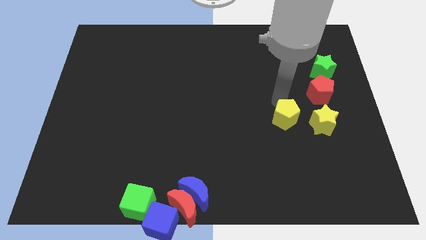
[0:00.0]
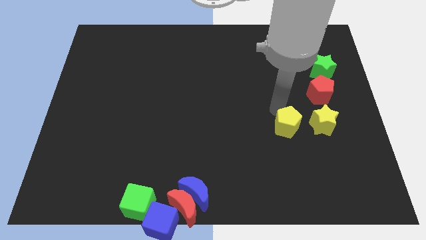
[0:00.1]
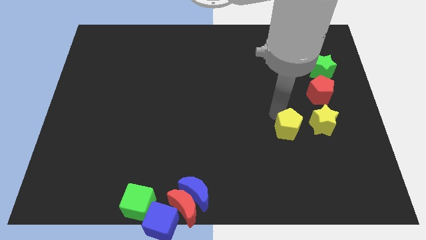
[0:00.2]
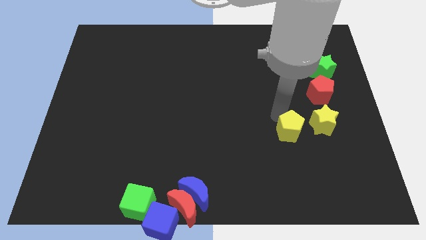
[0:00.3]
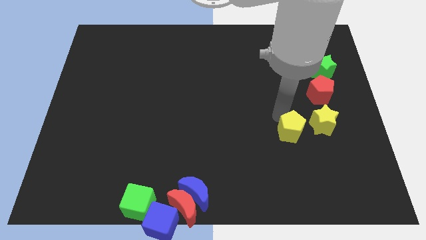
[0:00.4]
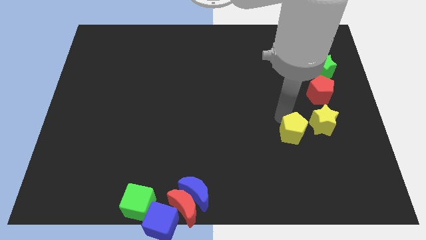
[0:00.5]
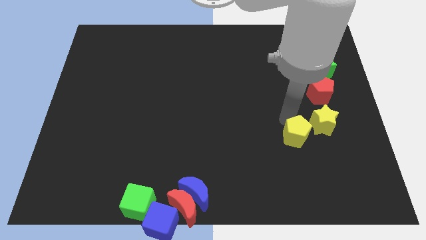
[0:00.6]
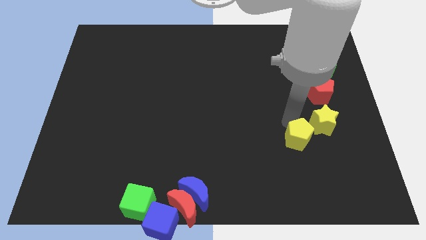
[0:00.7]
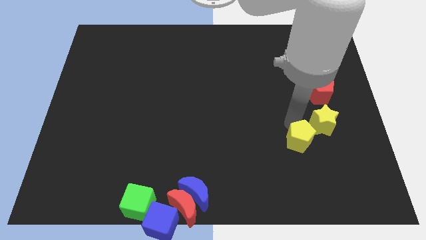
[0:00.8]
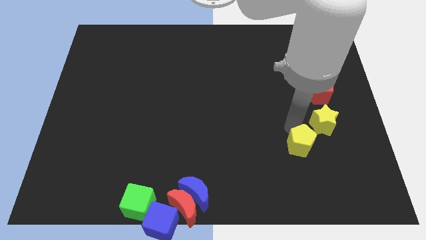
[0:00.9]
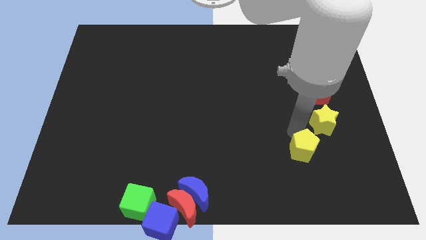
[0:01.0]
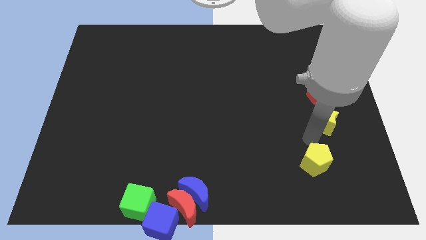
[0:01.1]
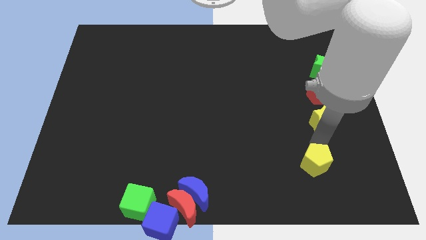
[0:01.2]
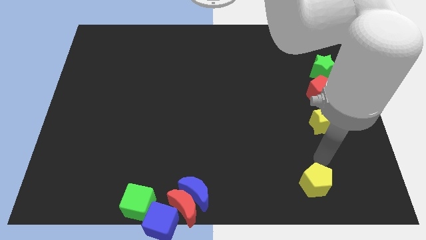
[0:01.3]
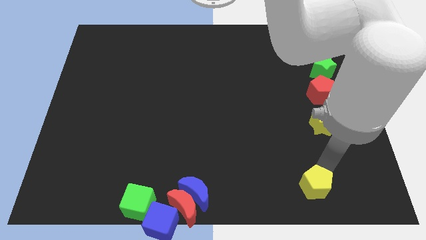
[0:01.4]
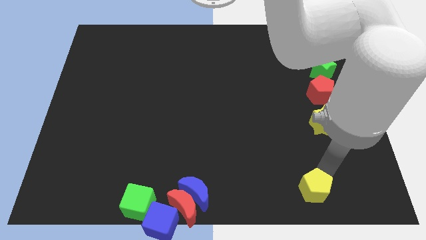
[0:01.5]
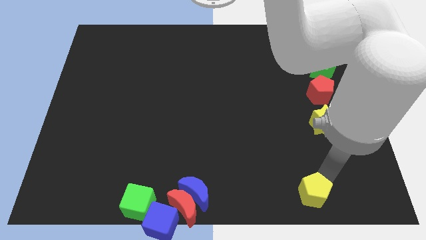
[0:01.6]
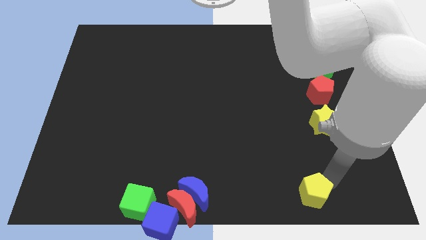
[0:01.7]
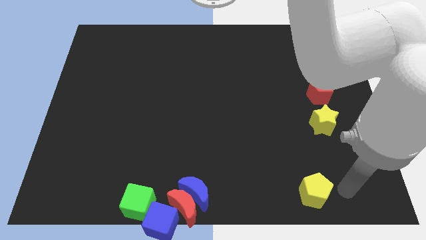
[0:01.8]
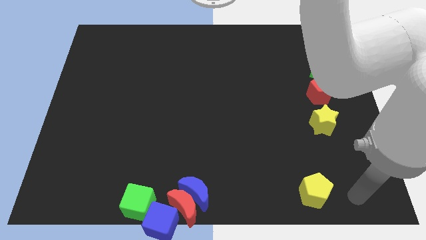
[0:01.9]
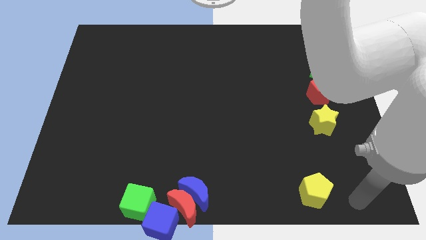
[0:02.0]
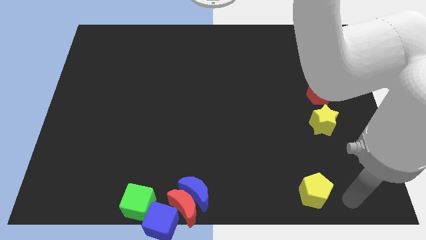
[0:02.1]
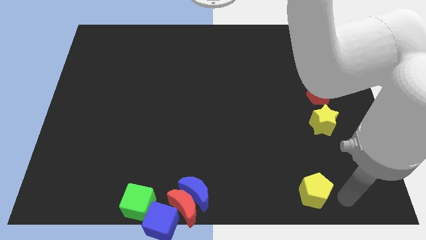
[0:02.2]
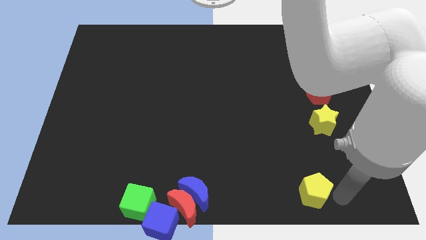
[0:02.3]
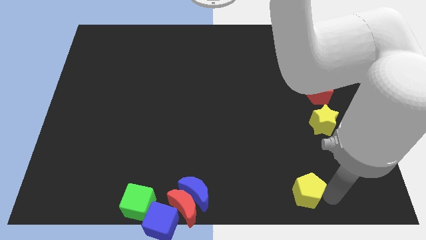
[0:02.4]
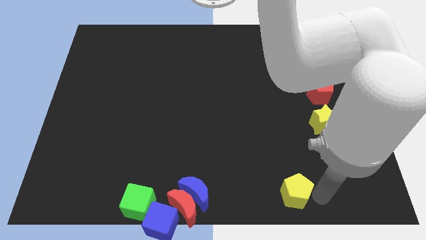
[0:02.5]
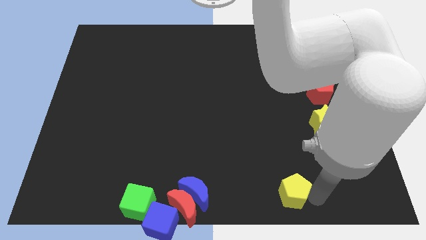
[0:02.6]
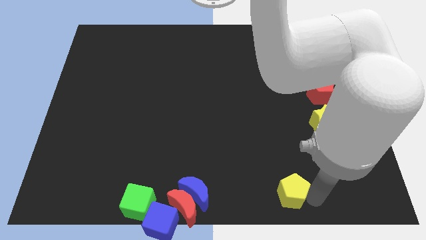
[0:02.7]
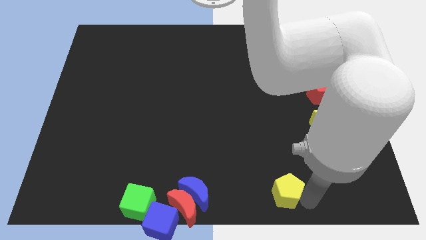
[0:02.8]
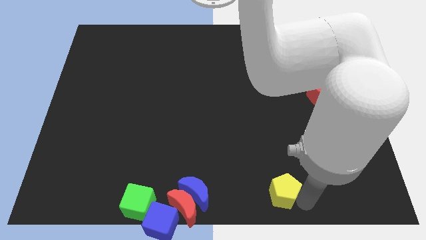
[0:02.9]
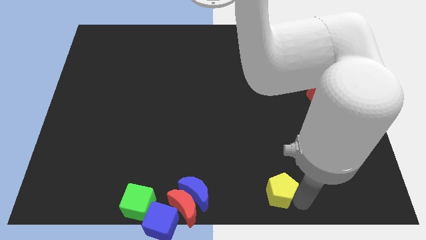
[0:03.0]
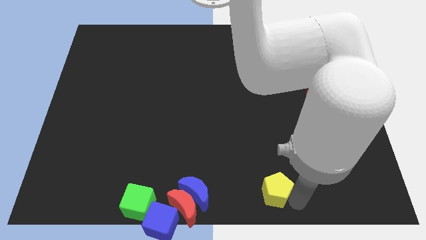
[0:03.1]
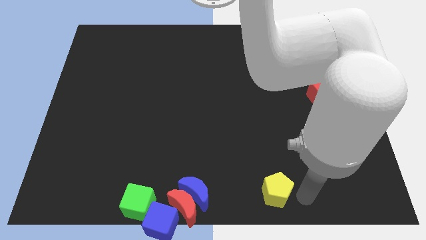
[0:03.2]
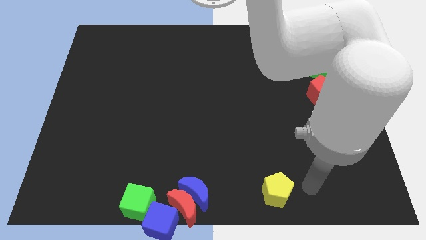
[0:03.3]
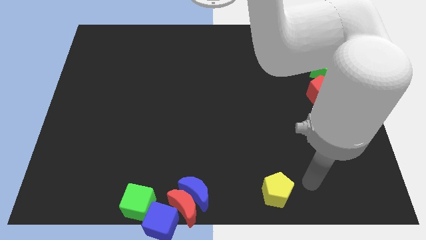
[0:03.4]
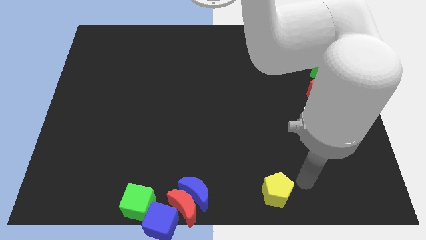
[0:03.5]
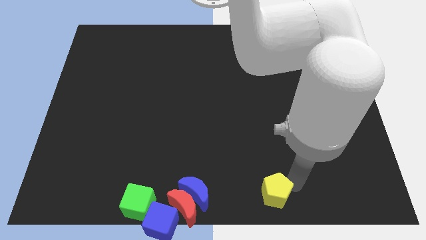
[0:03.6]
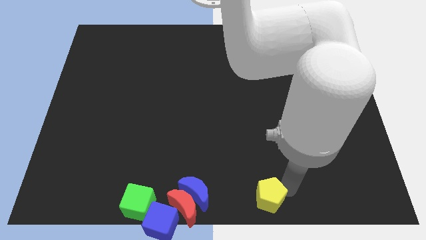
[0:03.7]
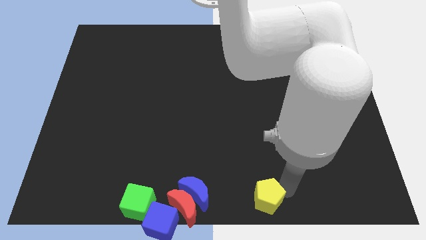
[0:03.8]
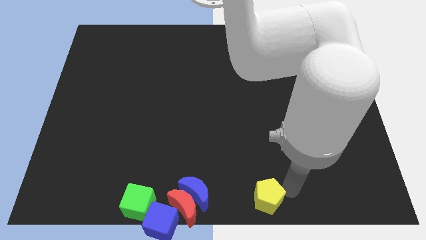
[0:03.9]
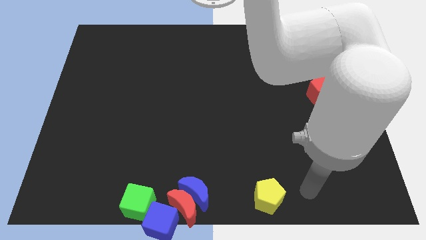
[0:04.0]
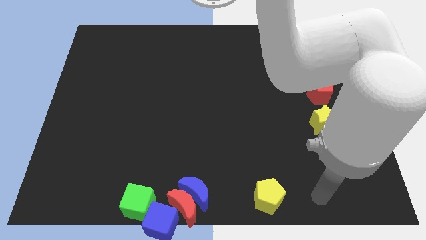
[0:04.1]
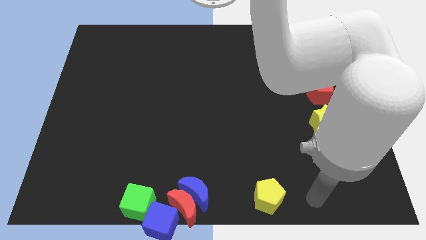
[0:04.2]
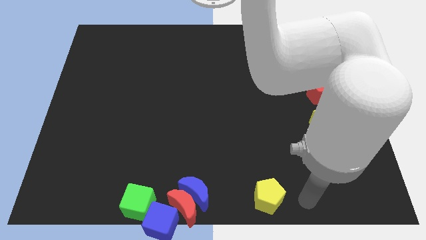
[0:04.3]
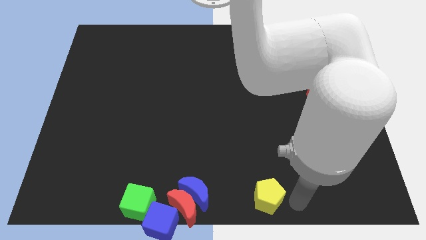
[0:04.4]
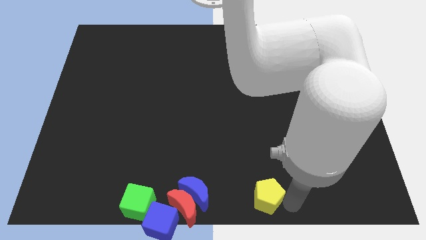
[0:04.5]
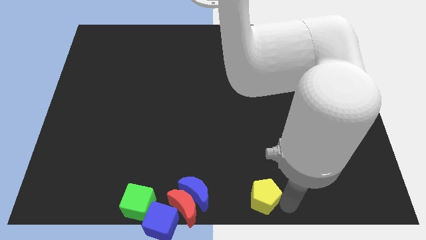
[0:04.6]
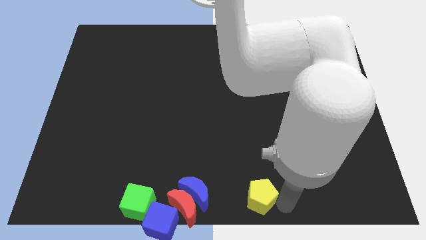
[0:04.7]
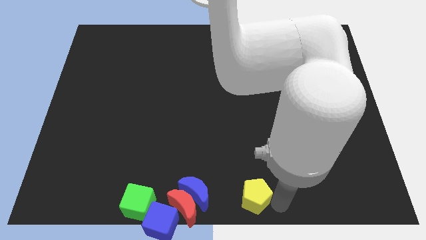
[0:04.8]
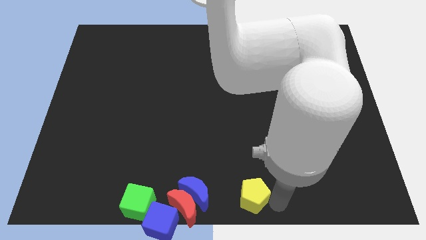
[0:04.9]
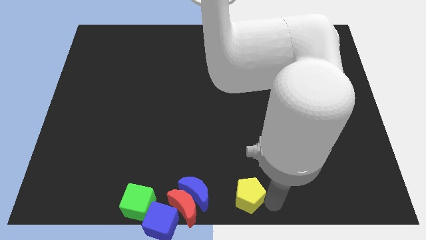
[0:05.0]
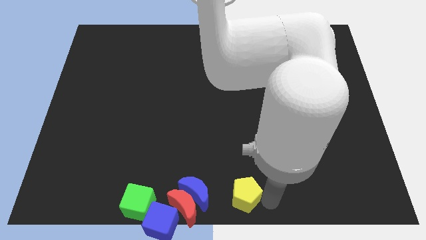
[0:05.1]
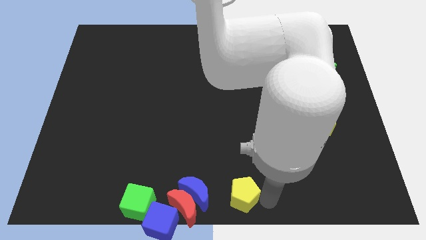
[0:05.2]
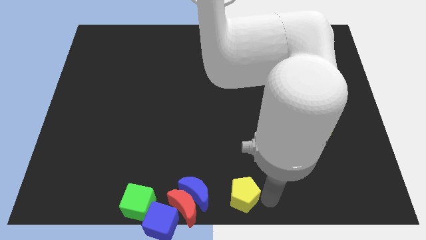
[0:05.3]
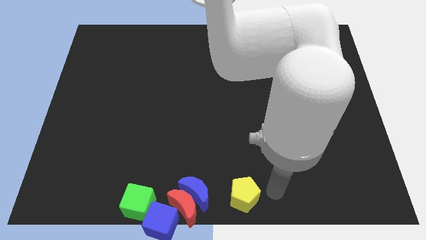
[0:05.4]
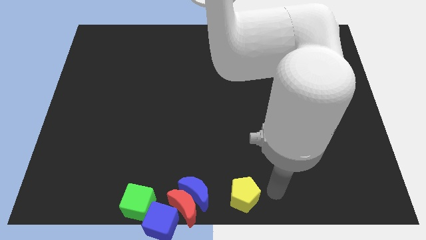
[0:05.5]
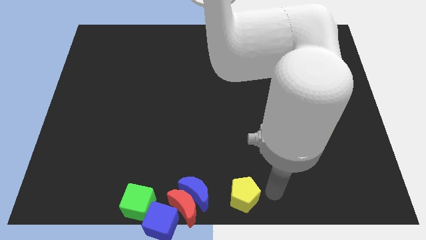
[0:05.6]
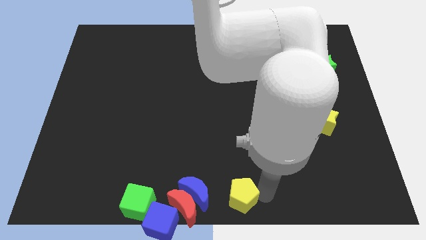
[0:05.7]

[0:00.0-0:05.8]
push the yellow pentagon towards the right side of the group of blocks

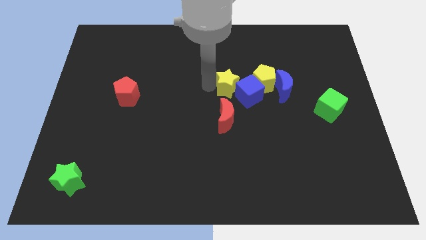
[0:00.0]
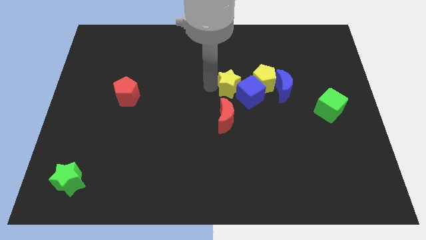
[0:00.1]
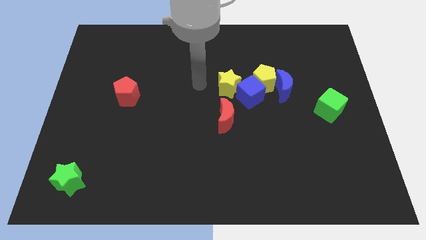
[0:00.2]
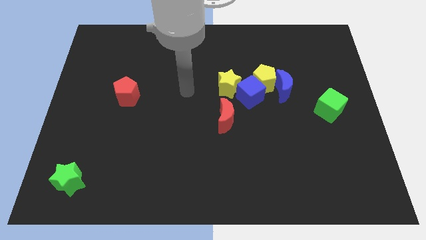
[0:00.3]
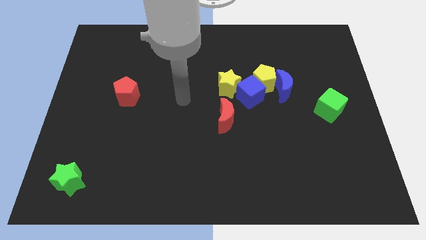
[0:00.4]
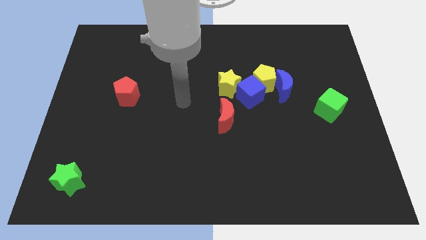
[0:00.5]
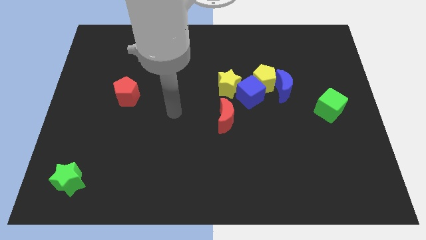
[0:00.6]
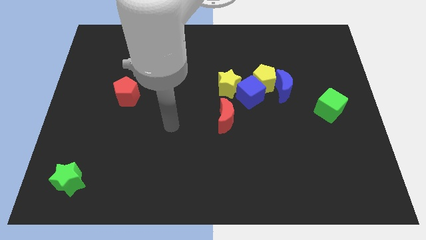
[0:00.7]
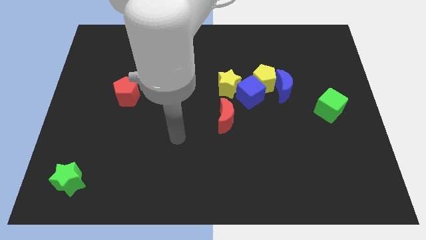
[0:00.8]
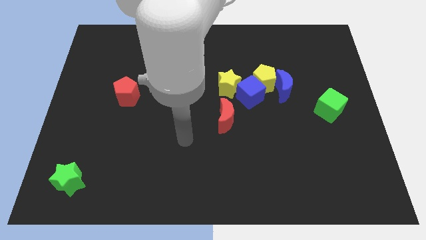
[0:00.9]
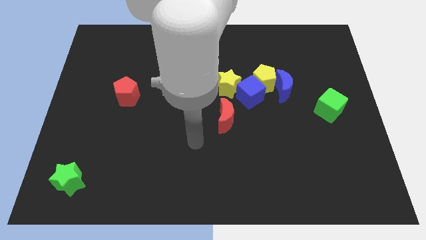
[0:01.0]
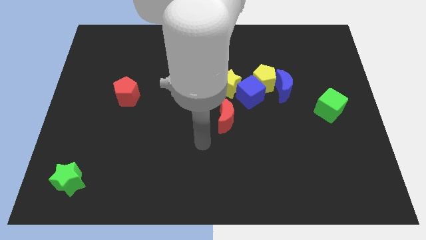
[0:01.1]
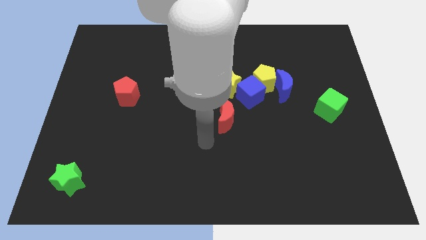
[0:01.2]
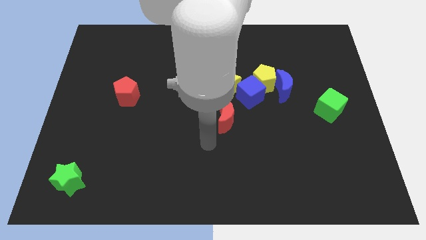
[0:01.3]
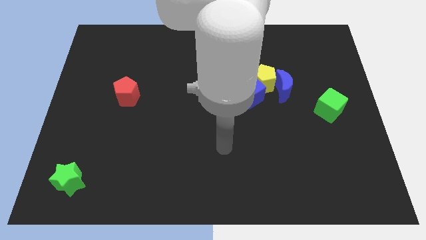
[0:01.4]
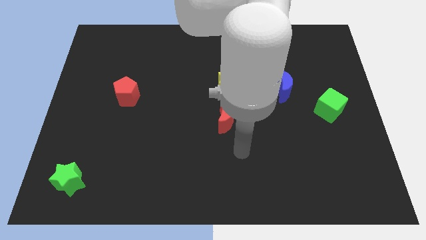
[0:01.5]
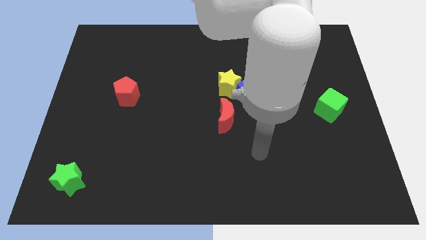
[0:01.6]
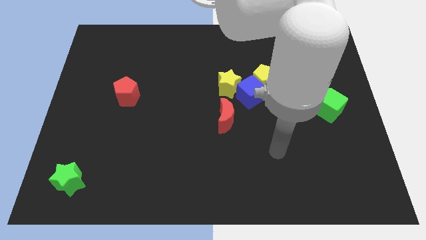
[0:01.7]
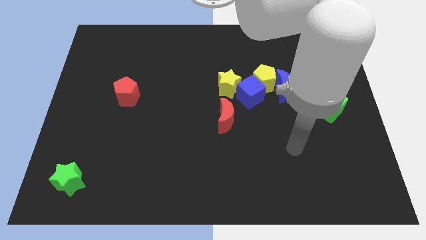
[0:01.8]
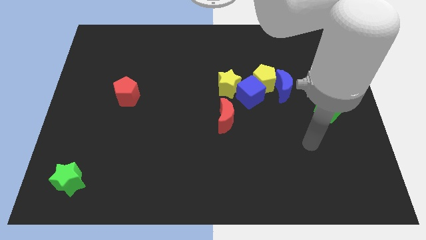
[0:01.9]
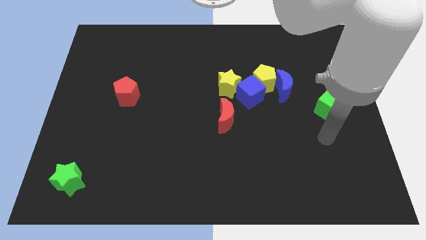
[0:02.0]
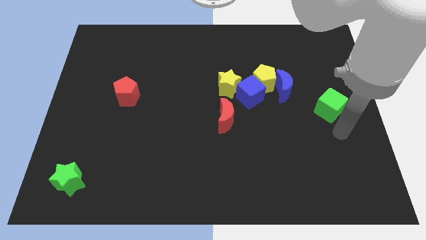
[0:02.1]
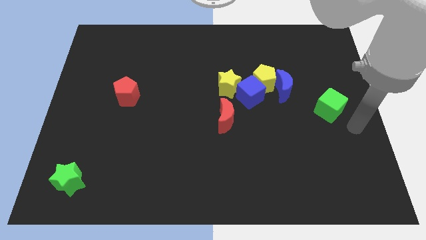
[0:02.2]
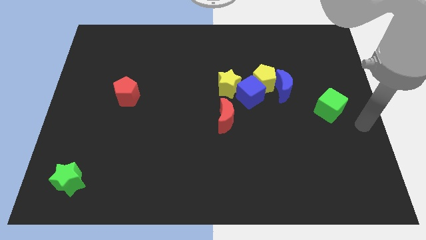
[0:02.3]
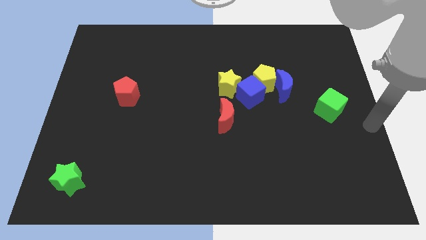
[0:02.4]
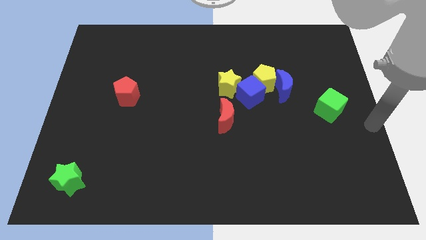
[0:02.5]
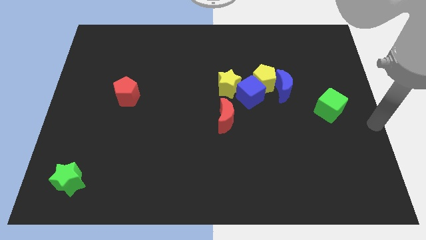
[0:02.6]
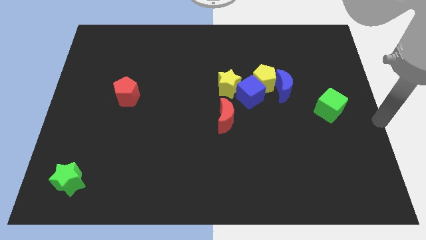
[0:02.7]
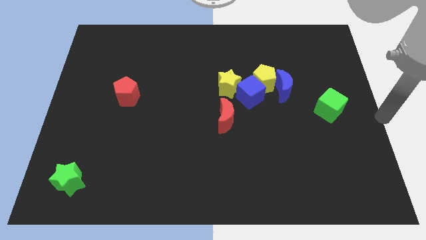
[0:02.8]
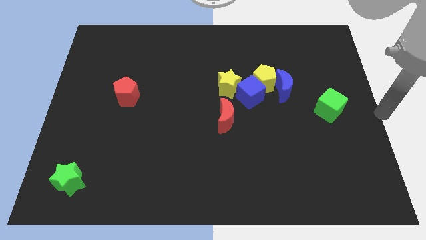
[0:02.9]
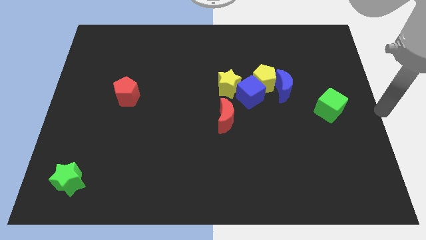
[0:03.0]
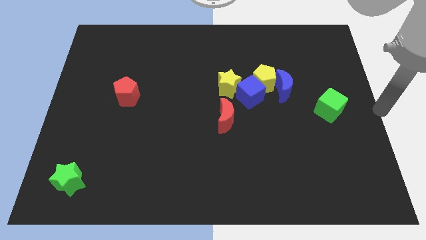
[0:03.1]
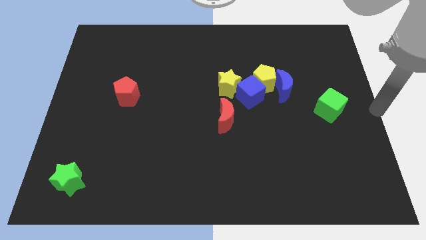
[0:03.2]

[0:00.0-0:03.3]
go to the center right of the board
